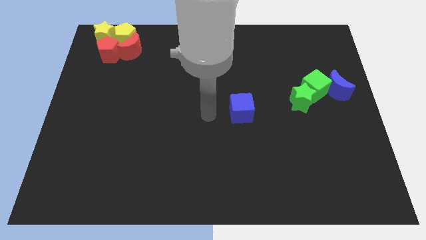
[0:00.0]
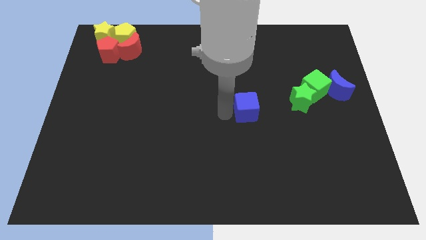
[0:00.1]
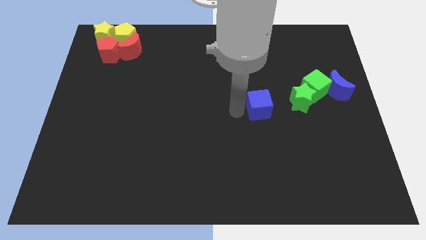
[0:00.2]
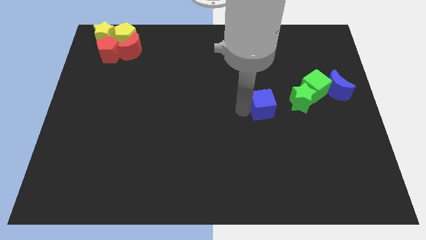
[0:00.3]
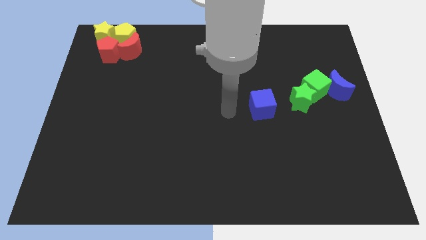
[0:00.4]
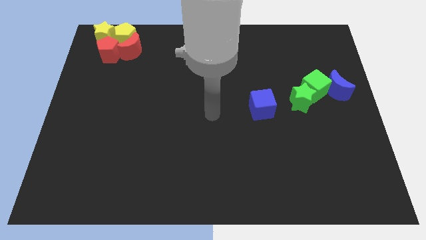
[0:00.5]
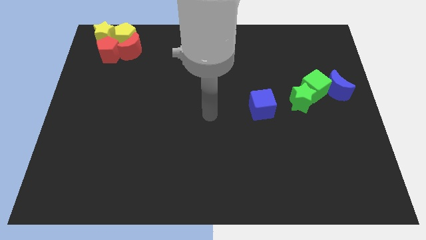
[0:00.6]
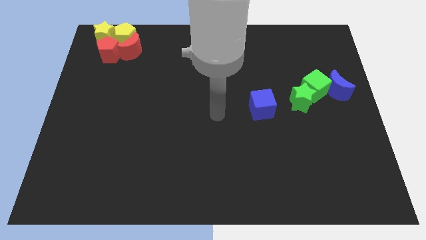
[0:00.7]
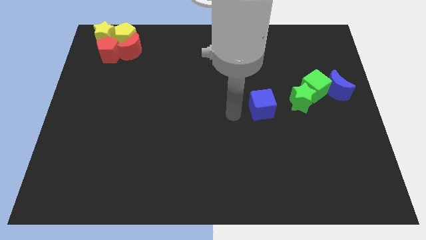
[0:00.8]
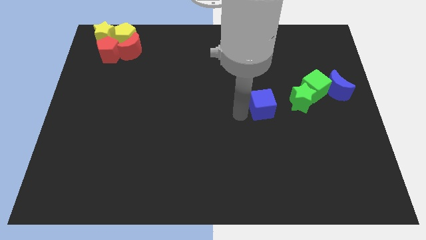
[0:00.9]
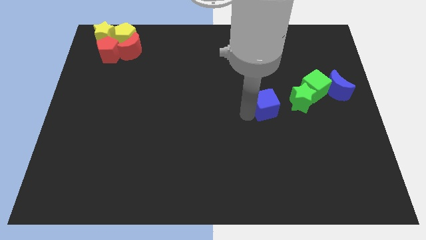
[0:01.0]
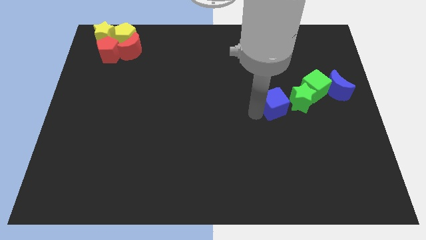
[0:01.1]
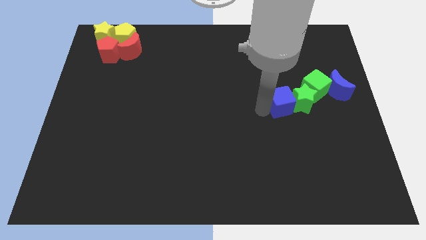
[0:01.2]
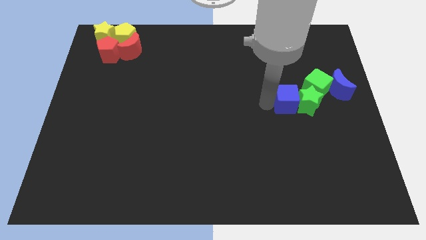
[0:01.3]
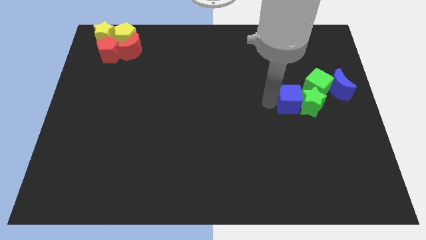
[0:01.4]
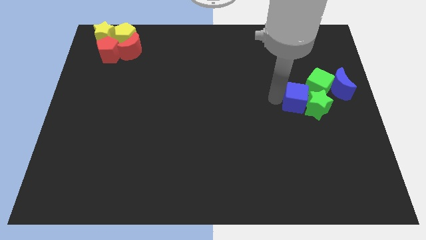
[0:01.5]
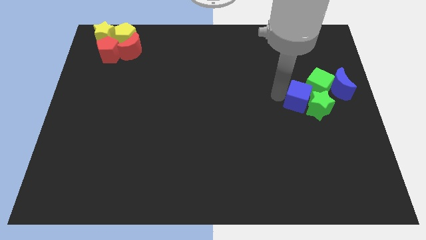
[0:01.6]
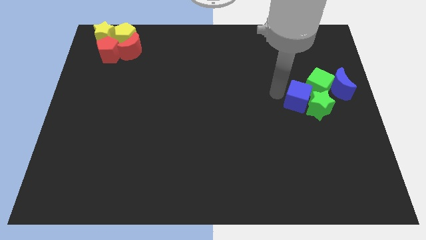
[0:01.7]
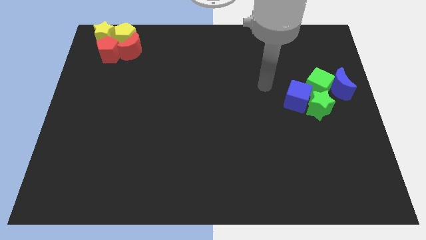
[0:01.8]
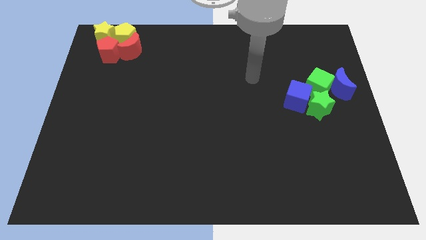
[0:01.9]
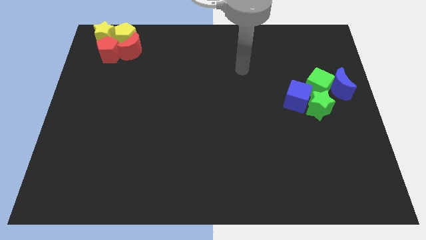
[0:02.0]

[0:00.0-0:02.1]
slide the blue cube to the top left of the green star

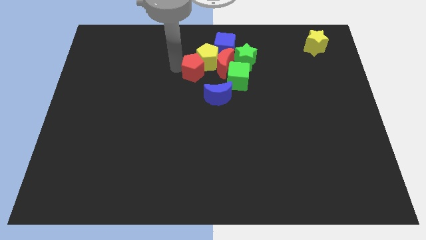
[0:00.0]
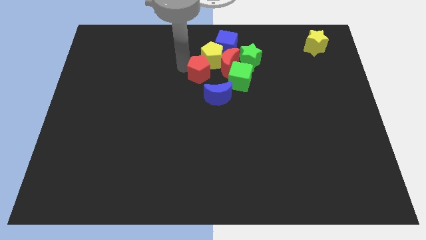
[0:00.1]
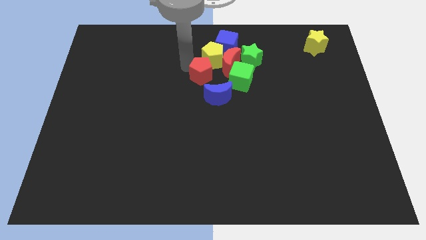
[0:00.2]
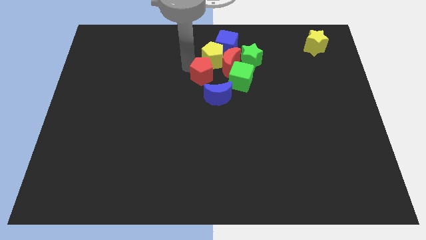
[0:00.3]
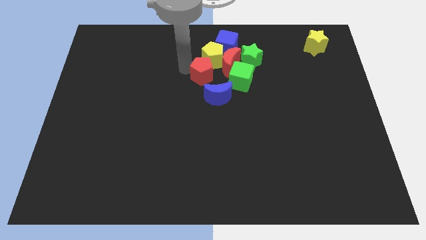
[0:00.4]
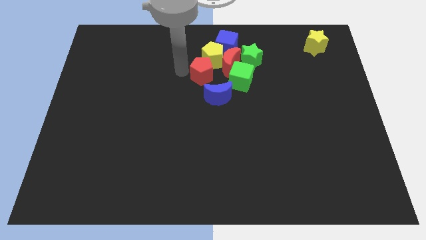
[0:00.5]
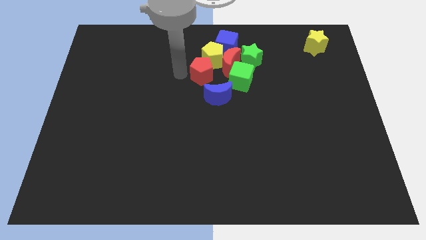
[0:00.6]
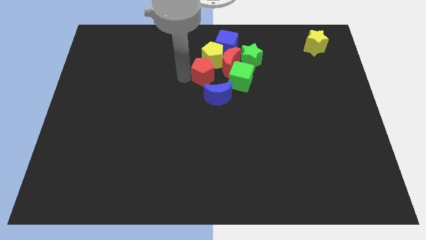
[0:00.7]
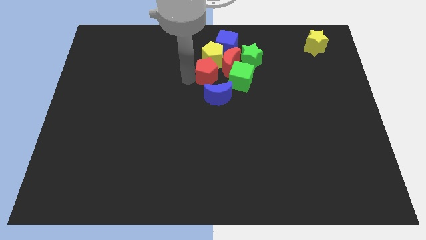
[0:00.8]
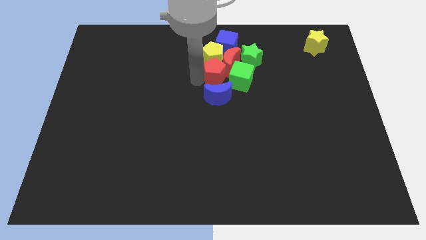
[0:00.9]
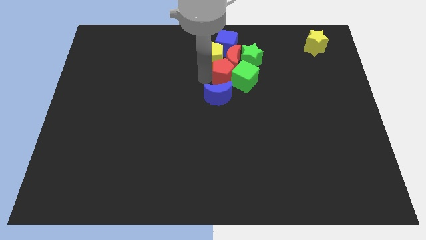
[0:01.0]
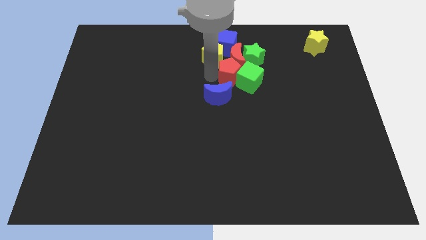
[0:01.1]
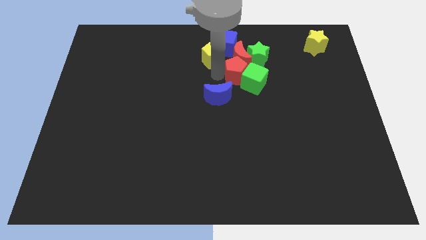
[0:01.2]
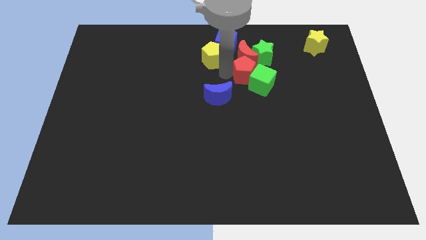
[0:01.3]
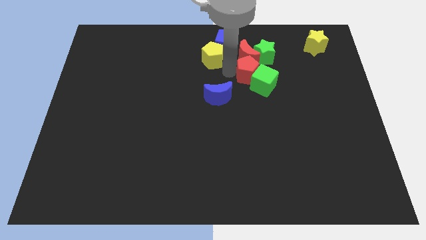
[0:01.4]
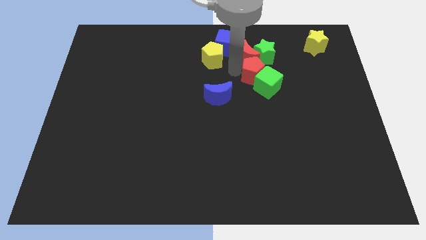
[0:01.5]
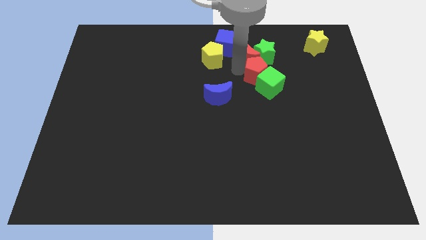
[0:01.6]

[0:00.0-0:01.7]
drag the red pentagon into group of blocks

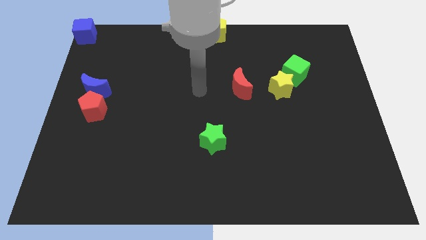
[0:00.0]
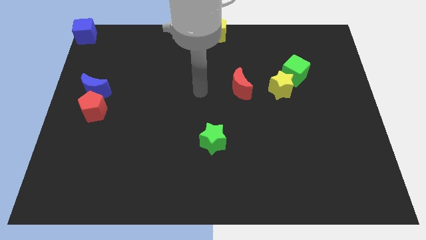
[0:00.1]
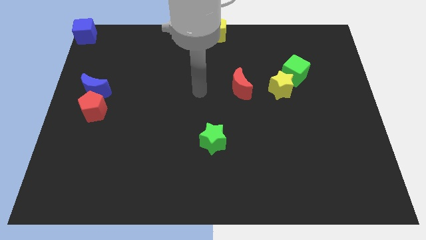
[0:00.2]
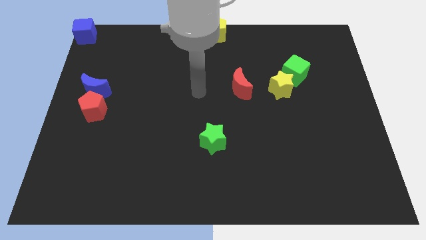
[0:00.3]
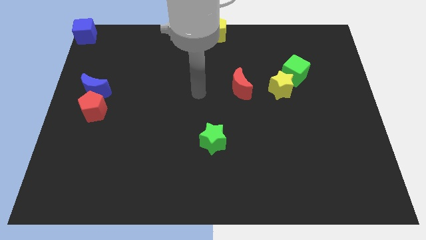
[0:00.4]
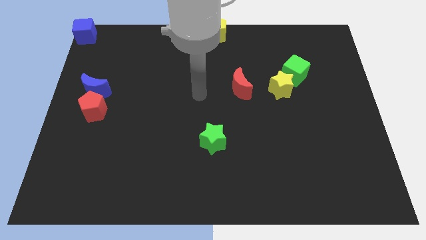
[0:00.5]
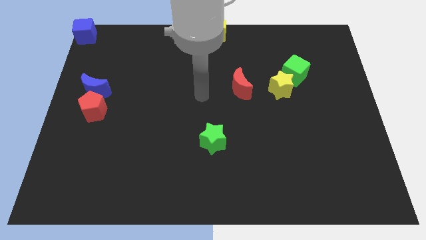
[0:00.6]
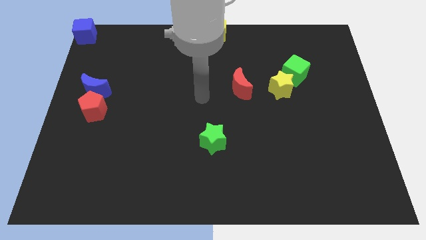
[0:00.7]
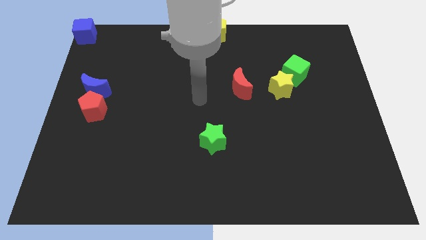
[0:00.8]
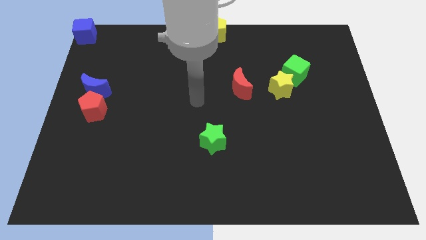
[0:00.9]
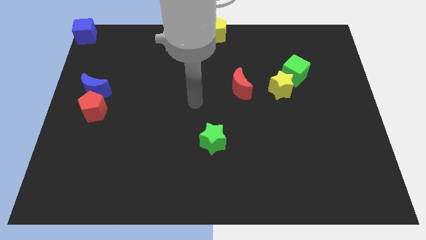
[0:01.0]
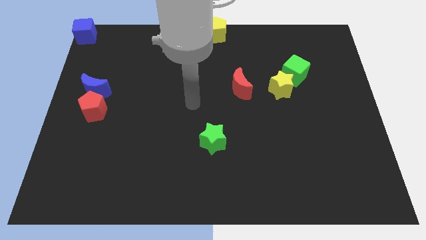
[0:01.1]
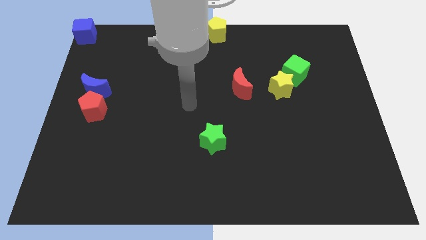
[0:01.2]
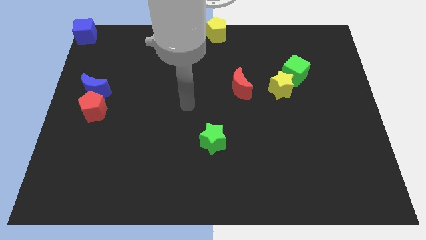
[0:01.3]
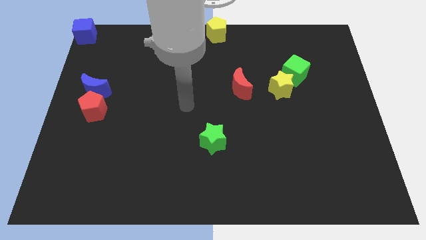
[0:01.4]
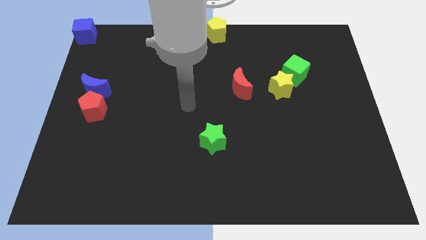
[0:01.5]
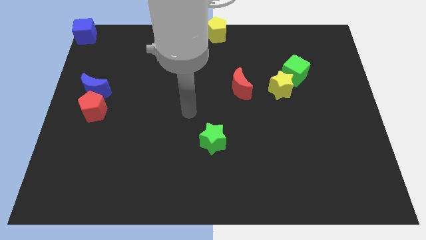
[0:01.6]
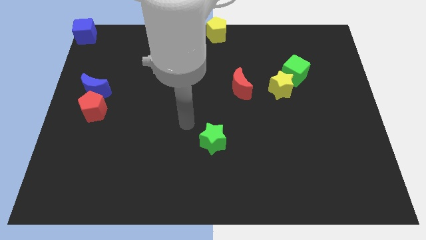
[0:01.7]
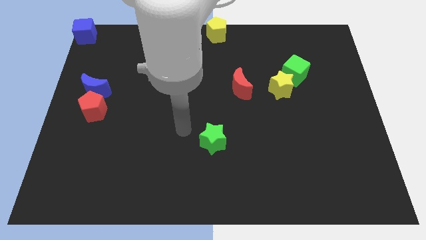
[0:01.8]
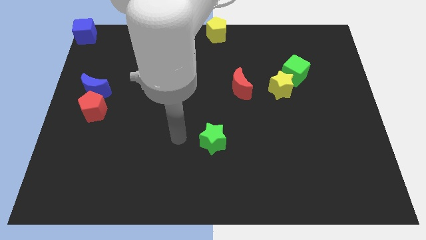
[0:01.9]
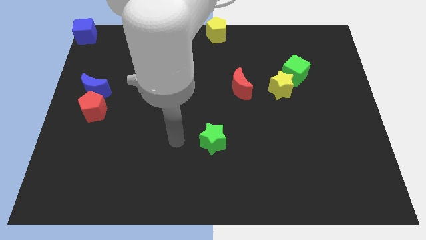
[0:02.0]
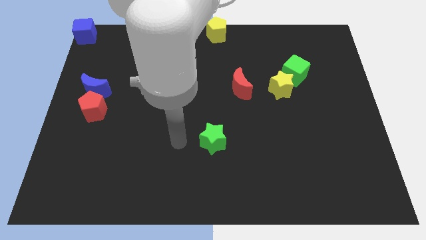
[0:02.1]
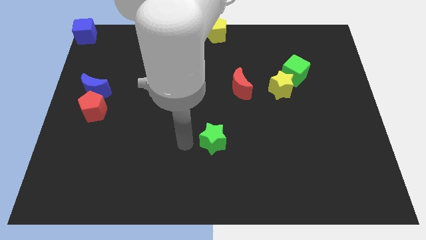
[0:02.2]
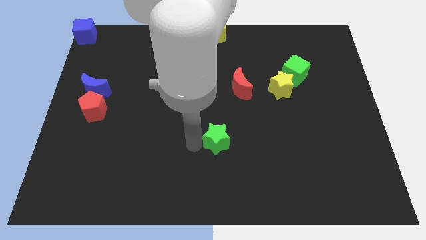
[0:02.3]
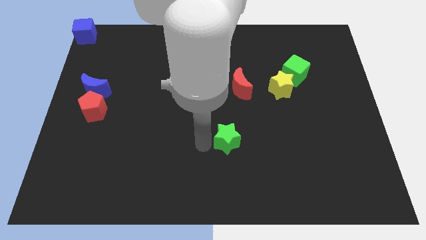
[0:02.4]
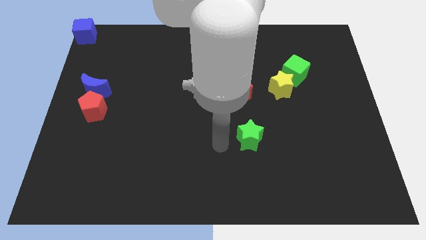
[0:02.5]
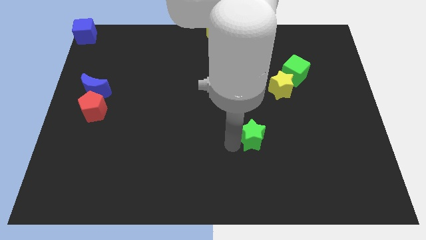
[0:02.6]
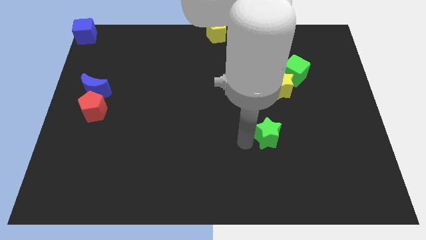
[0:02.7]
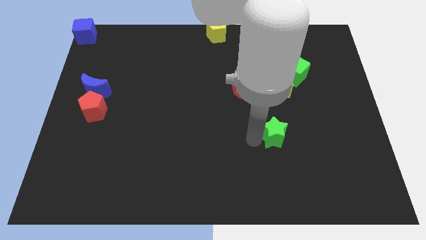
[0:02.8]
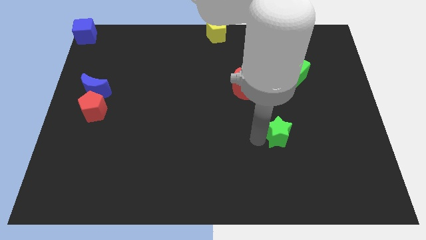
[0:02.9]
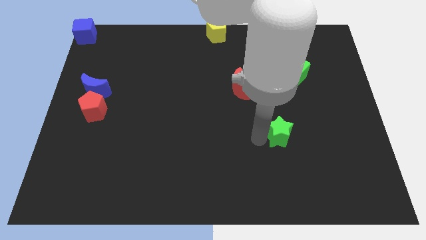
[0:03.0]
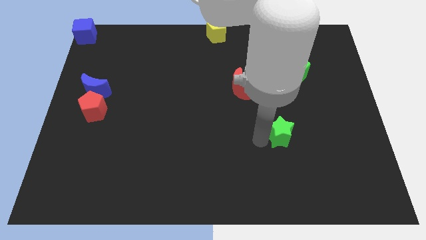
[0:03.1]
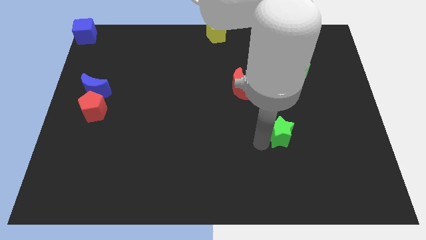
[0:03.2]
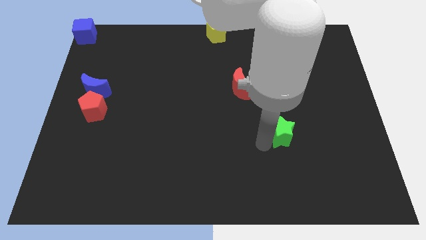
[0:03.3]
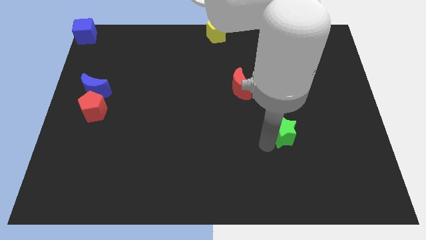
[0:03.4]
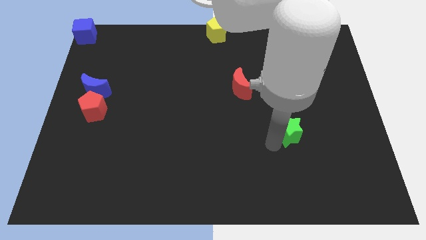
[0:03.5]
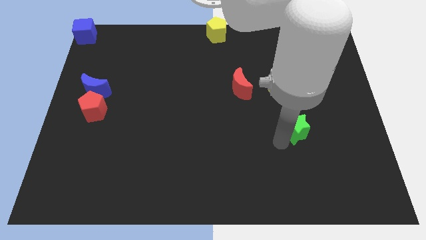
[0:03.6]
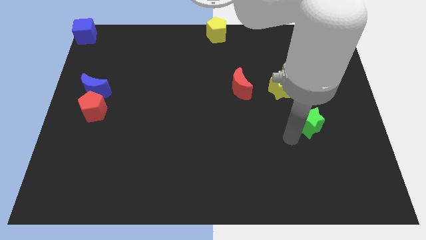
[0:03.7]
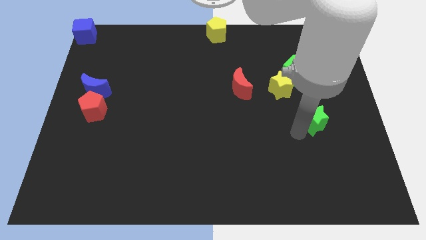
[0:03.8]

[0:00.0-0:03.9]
drag the green star diagonally bottom right to the red moon

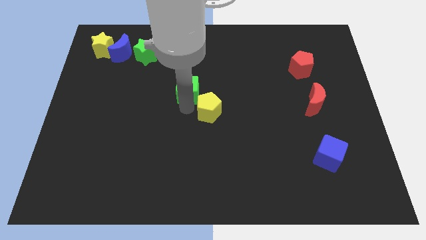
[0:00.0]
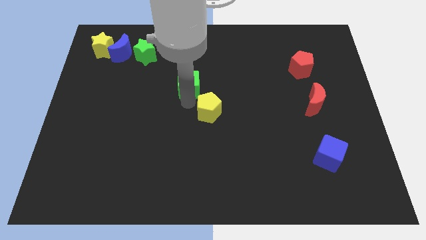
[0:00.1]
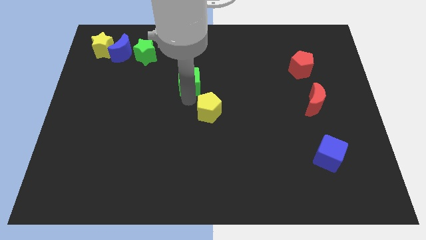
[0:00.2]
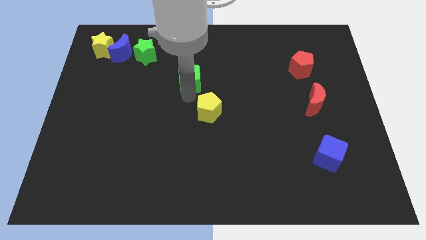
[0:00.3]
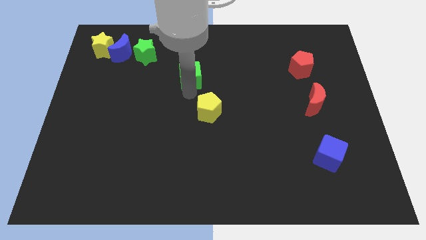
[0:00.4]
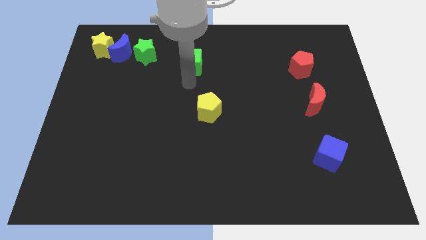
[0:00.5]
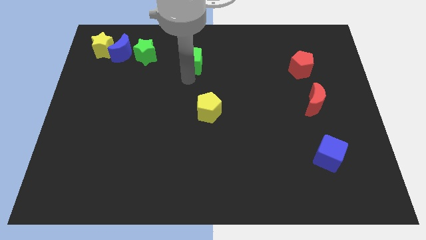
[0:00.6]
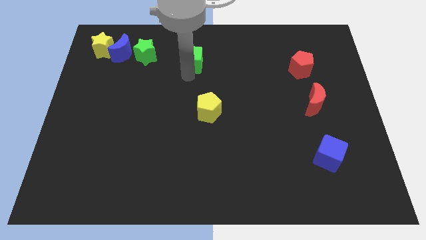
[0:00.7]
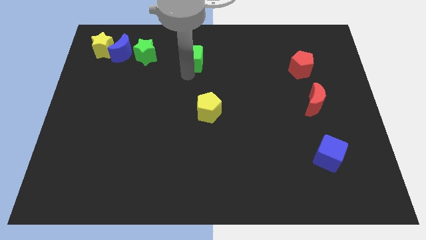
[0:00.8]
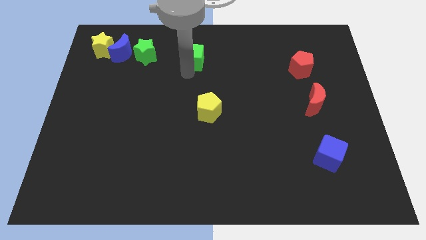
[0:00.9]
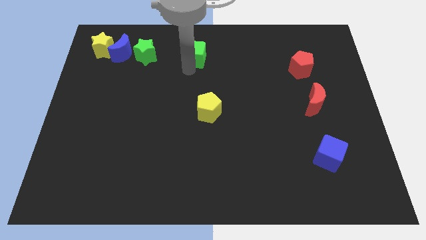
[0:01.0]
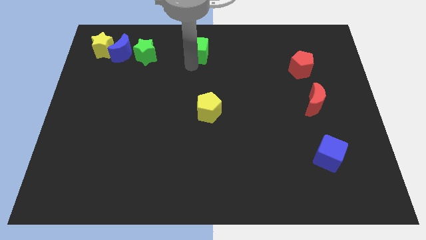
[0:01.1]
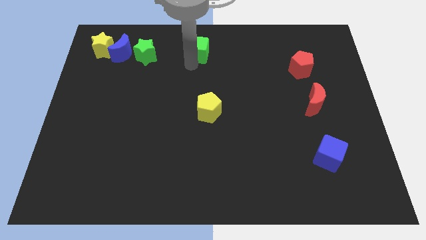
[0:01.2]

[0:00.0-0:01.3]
push the green cube to the right of the green star
